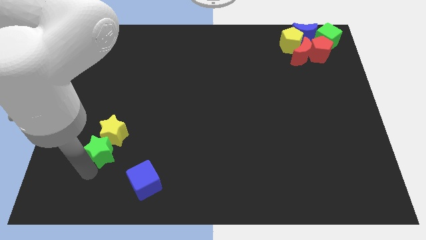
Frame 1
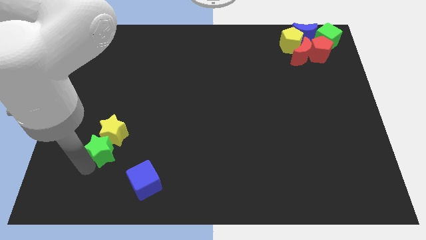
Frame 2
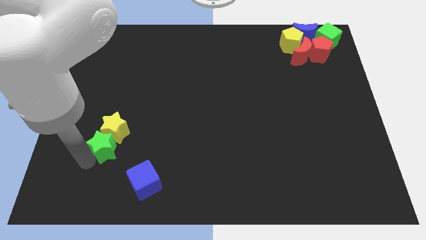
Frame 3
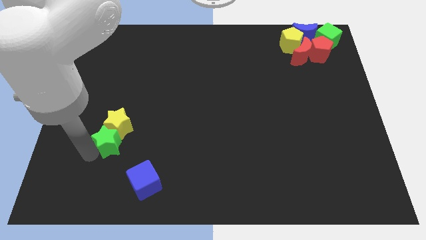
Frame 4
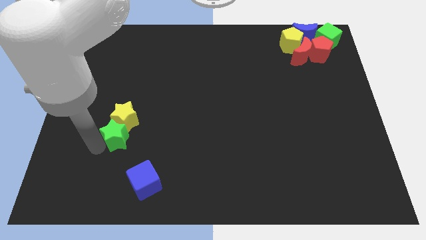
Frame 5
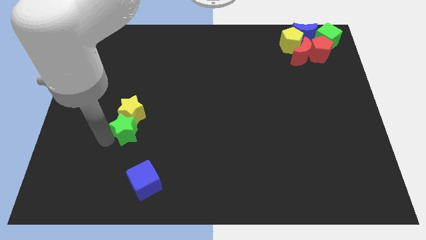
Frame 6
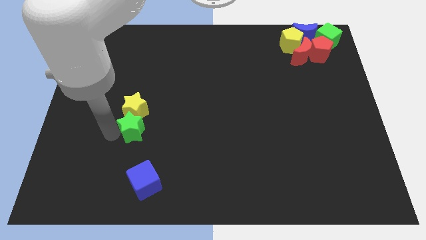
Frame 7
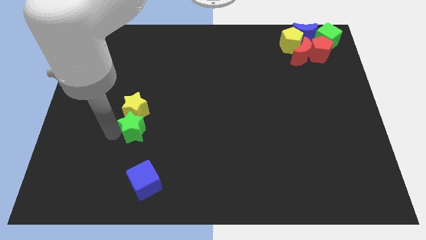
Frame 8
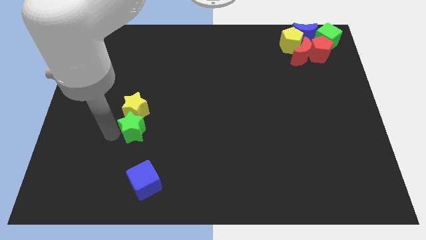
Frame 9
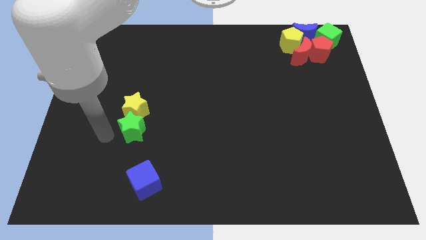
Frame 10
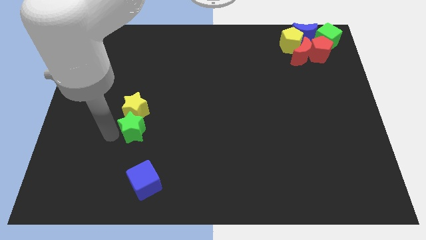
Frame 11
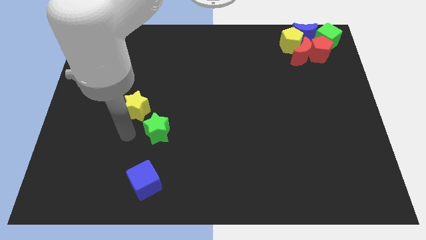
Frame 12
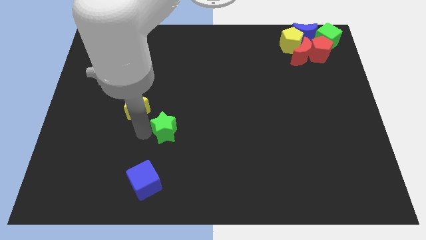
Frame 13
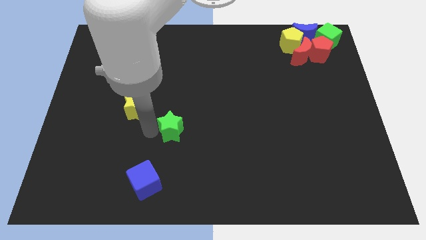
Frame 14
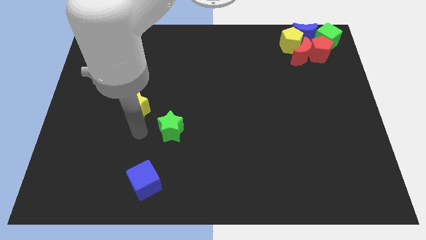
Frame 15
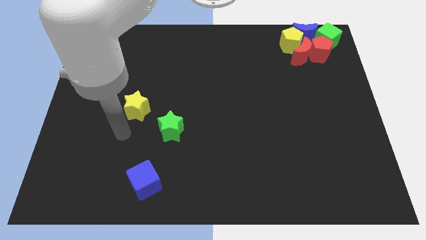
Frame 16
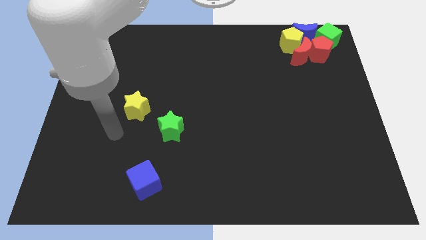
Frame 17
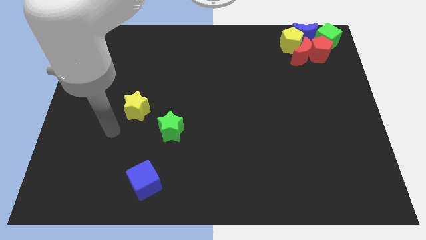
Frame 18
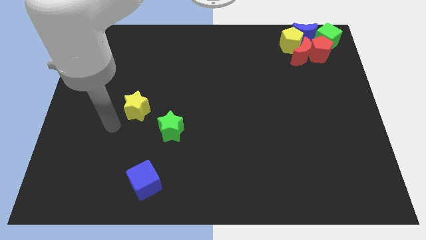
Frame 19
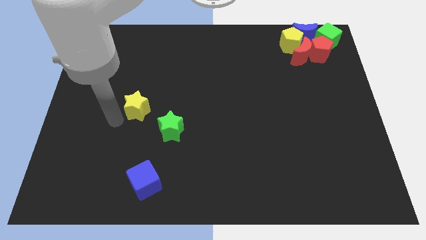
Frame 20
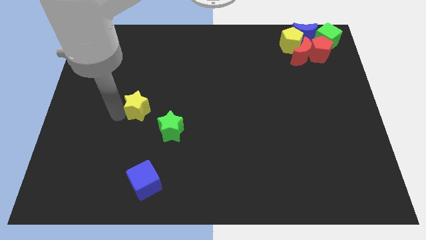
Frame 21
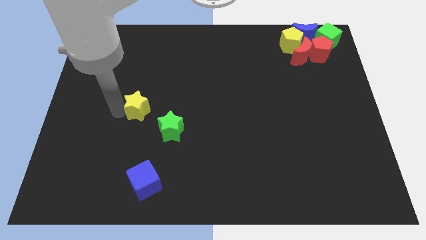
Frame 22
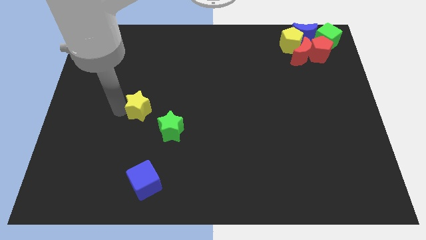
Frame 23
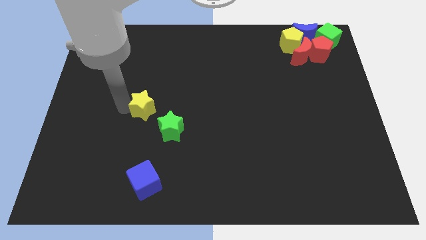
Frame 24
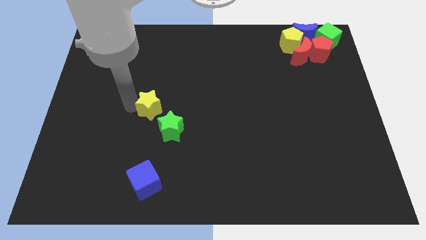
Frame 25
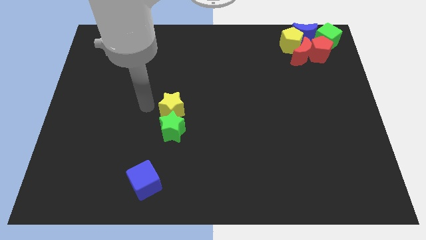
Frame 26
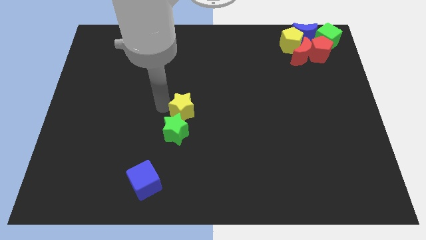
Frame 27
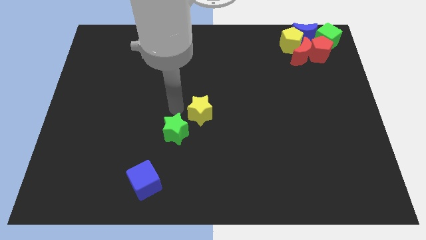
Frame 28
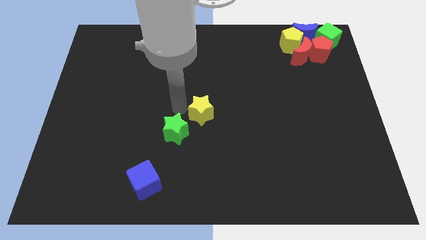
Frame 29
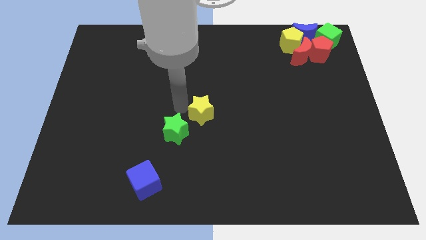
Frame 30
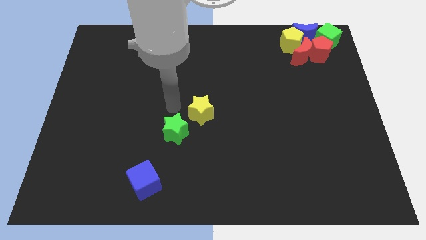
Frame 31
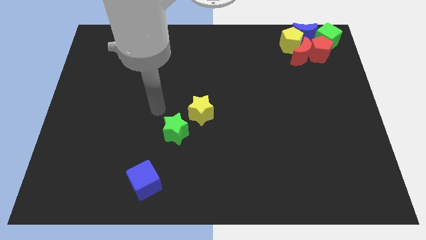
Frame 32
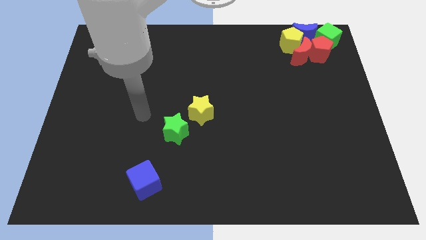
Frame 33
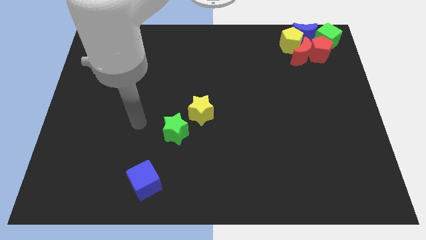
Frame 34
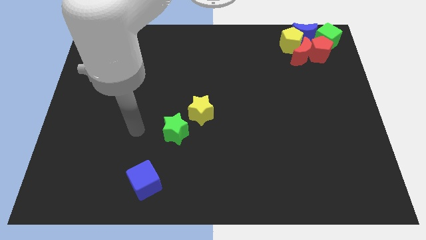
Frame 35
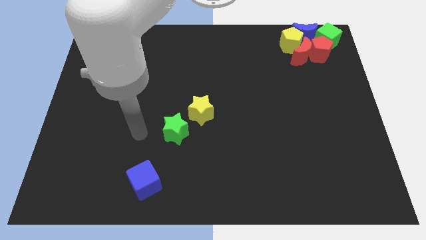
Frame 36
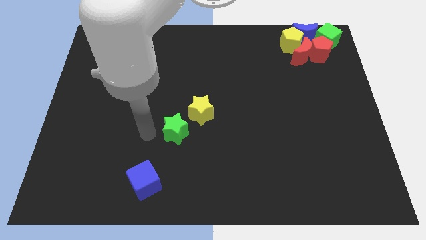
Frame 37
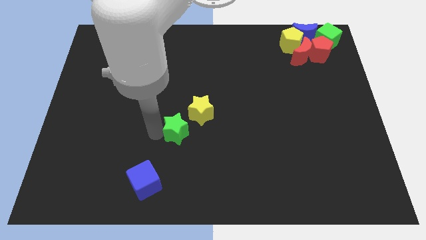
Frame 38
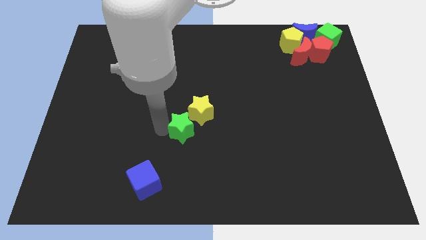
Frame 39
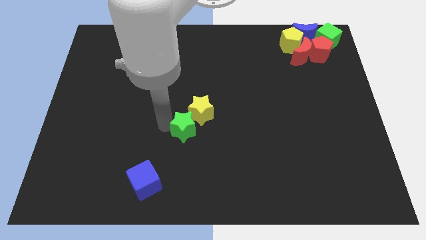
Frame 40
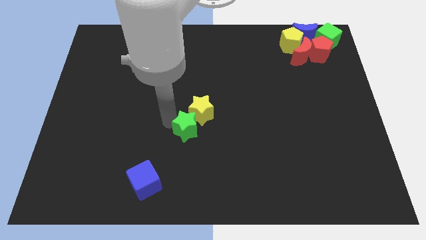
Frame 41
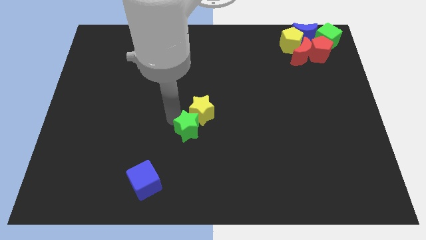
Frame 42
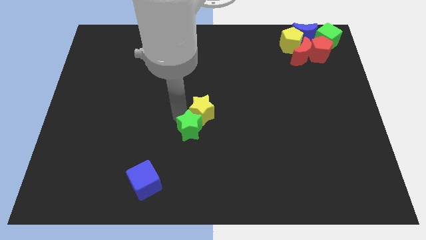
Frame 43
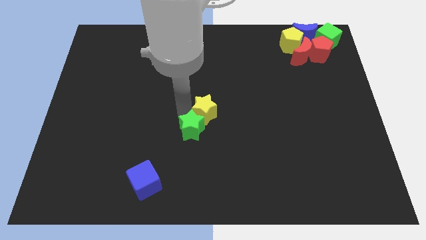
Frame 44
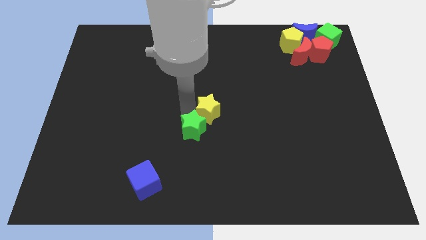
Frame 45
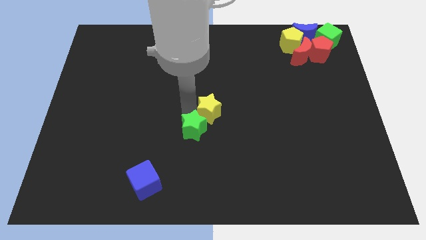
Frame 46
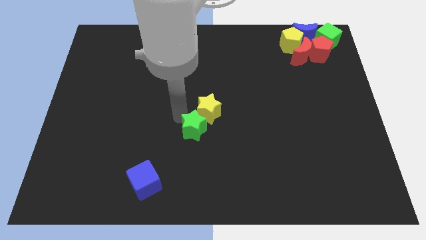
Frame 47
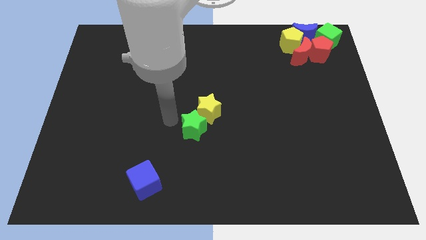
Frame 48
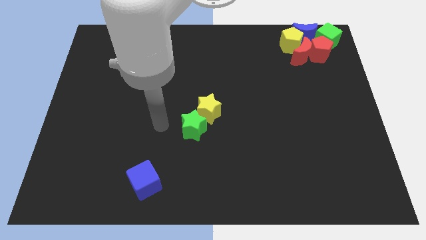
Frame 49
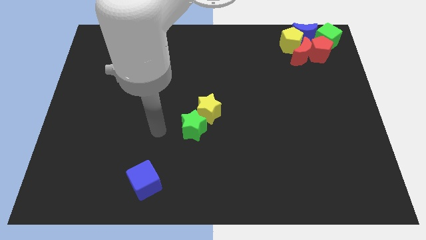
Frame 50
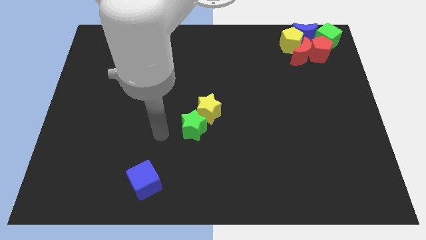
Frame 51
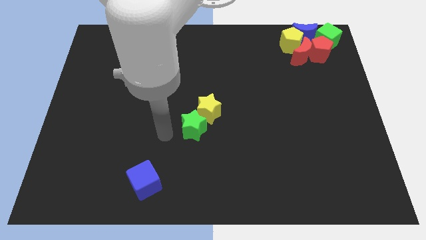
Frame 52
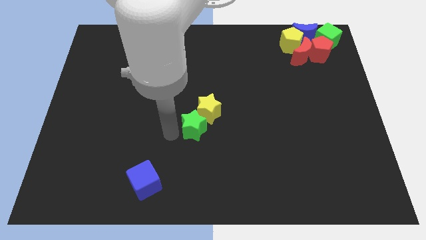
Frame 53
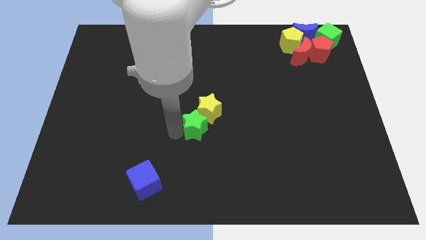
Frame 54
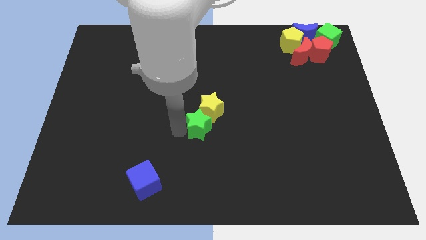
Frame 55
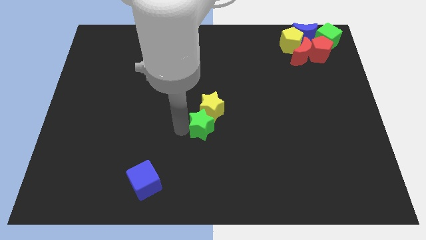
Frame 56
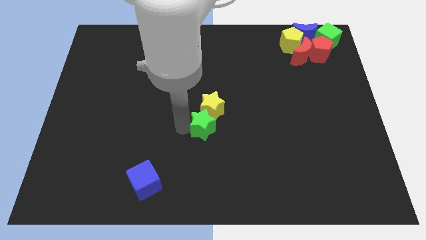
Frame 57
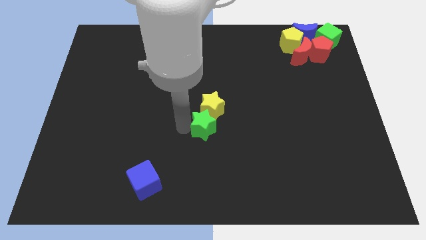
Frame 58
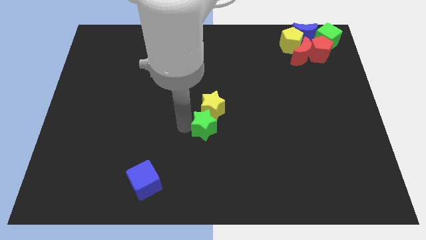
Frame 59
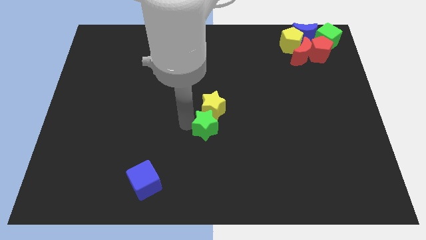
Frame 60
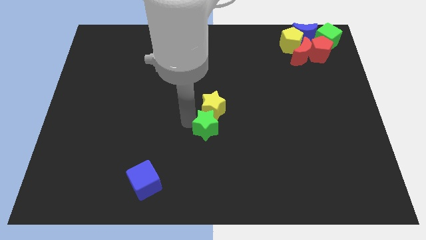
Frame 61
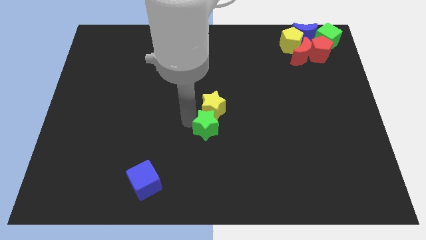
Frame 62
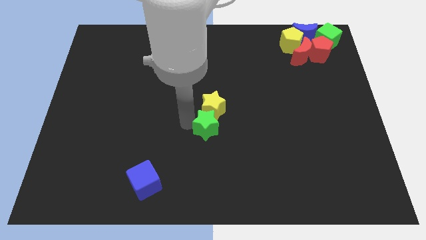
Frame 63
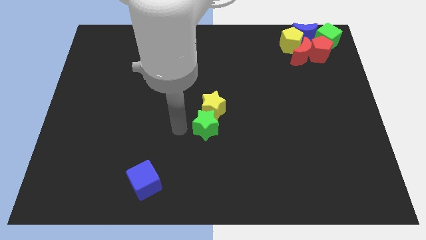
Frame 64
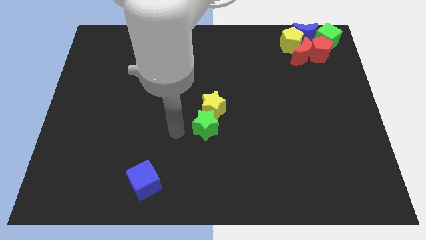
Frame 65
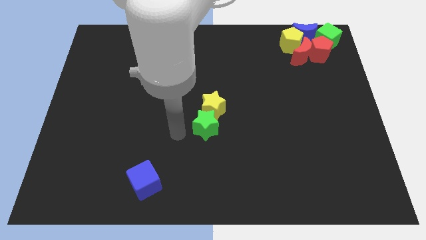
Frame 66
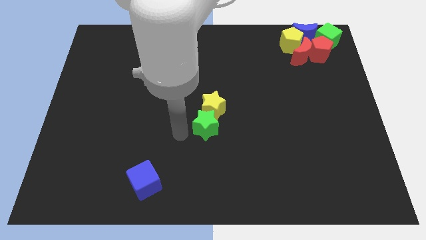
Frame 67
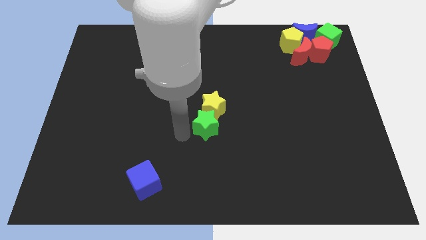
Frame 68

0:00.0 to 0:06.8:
place the yellow and green stars together at the center of the board

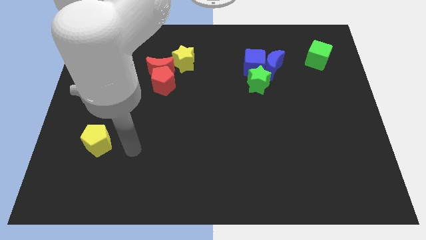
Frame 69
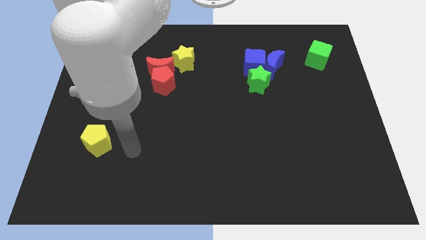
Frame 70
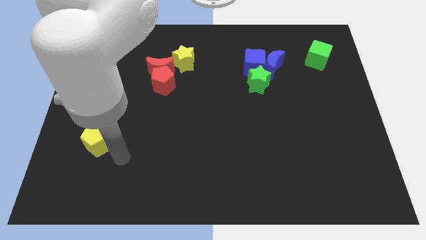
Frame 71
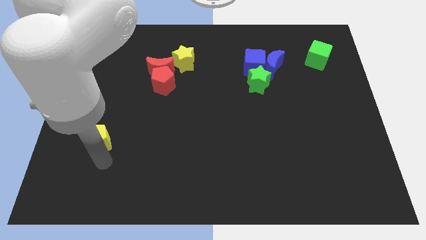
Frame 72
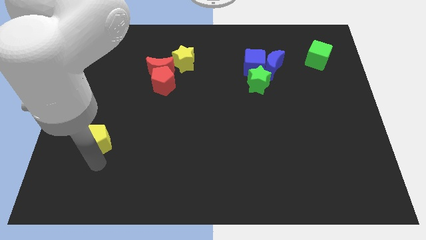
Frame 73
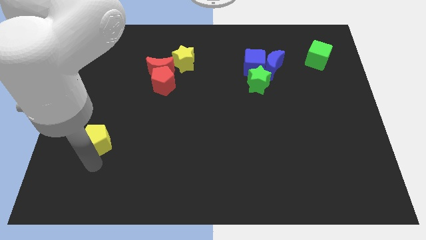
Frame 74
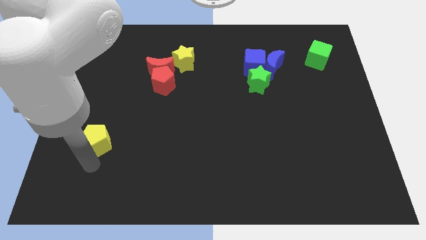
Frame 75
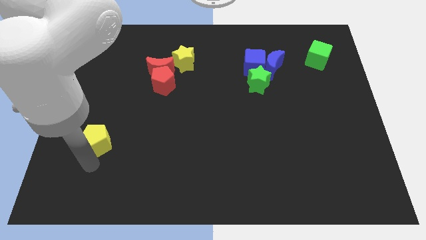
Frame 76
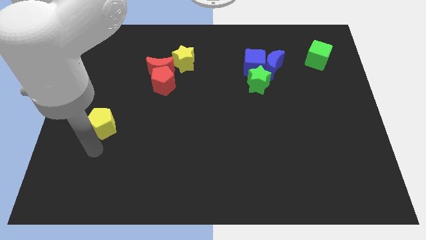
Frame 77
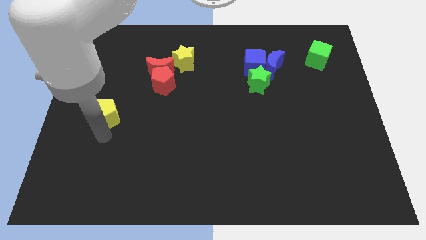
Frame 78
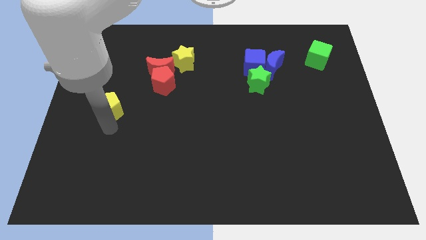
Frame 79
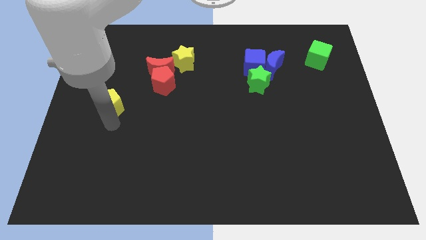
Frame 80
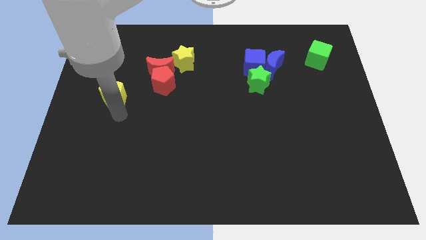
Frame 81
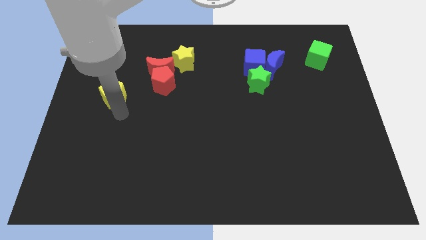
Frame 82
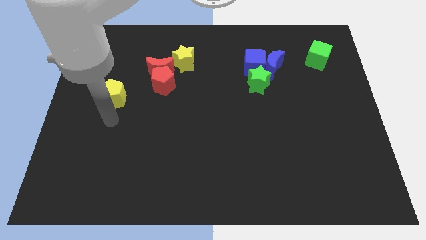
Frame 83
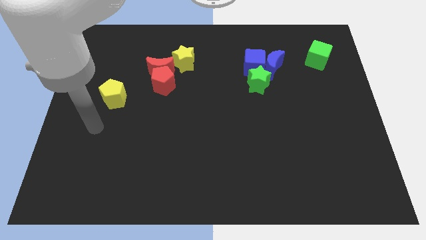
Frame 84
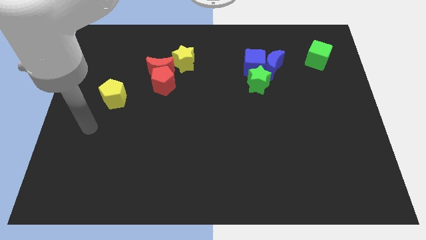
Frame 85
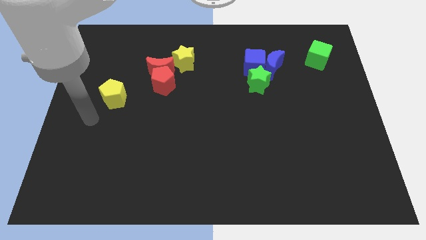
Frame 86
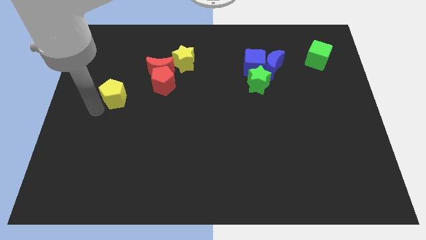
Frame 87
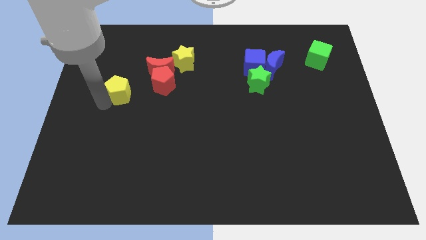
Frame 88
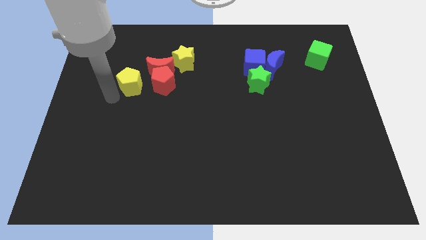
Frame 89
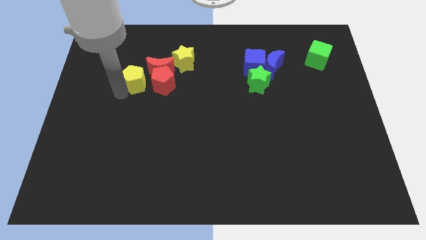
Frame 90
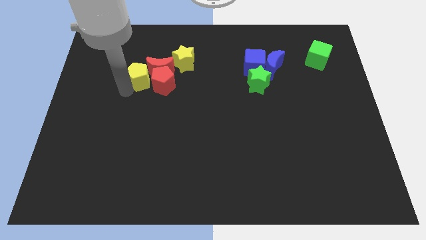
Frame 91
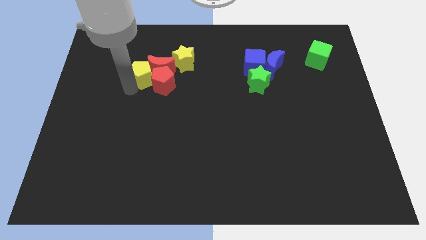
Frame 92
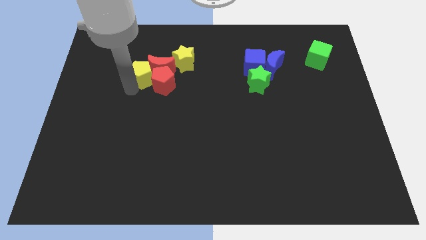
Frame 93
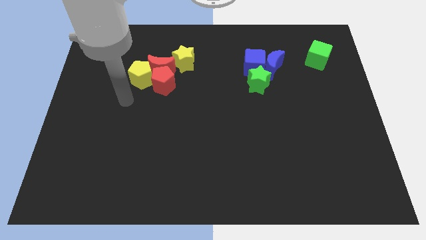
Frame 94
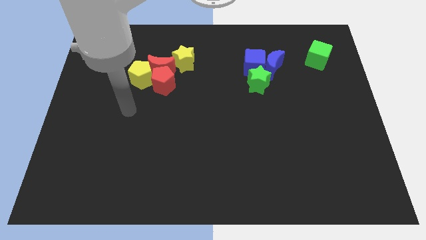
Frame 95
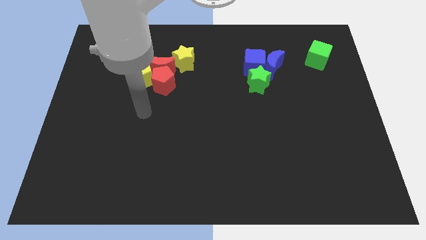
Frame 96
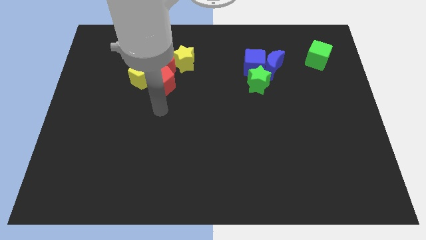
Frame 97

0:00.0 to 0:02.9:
move the yellow pentagon to the left of the red blocks
